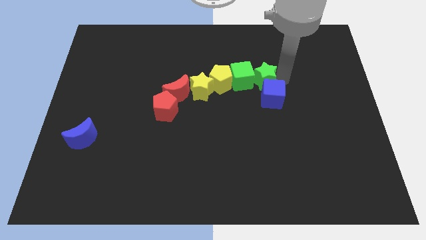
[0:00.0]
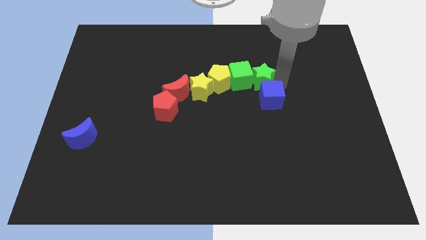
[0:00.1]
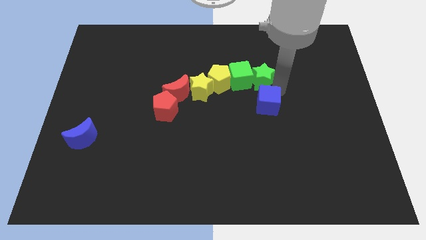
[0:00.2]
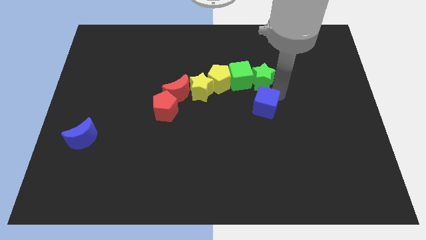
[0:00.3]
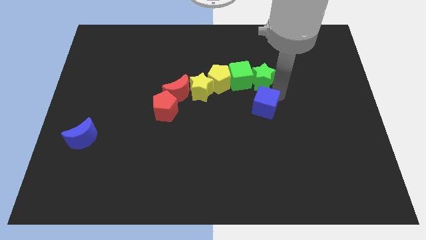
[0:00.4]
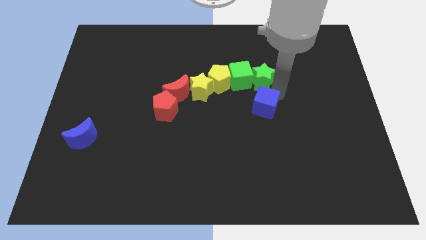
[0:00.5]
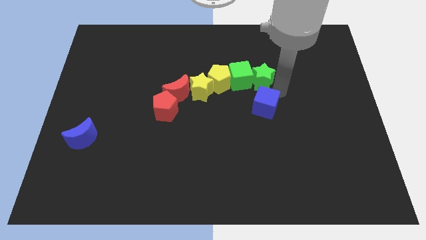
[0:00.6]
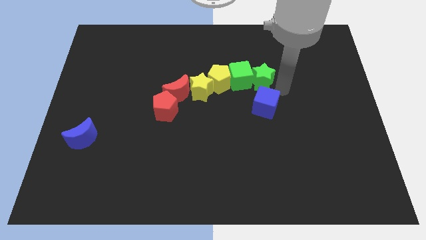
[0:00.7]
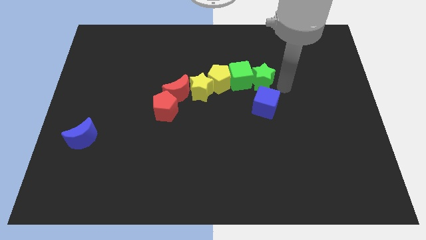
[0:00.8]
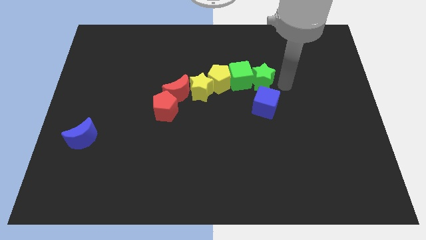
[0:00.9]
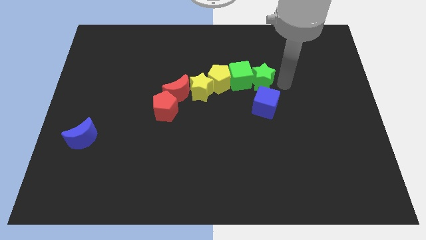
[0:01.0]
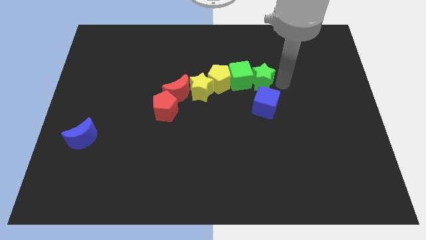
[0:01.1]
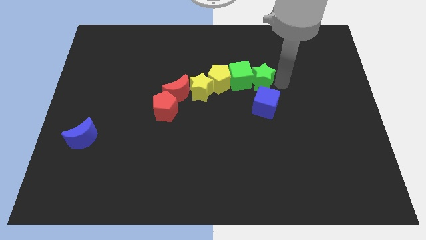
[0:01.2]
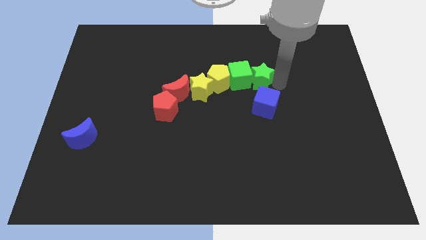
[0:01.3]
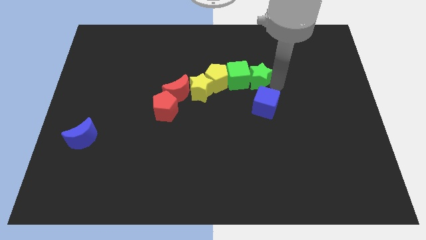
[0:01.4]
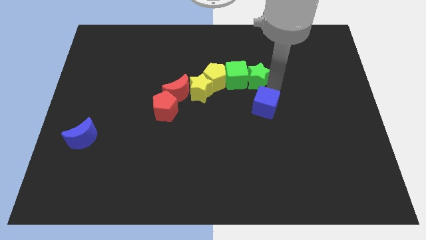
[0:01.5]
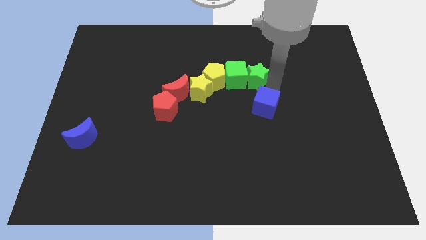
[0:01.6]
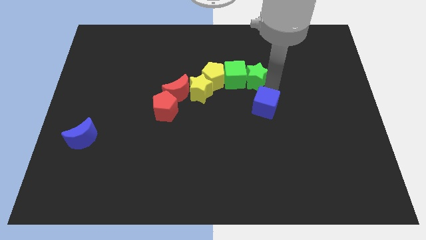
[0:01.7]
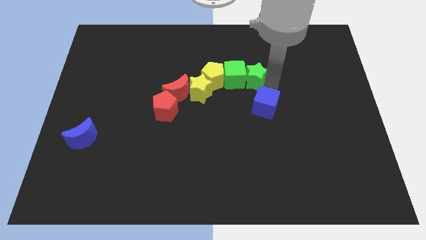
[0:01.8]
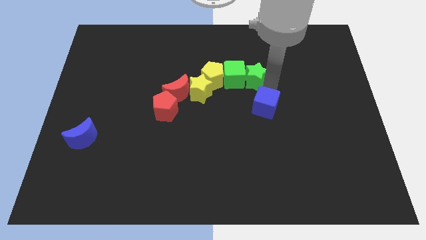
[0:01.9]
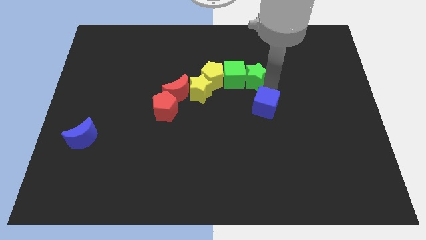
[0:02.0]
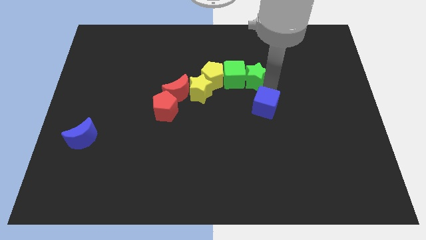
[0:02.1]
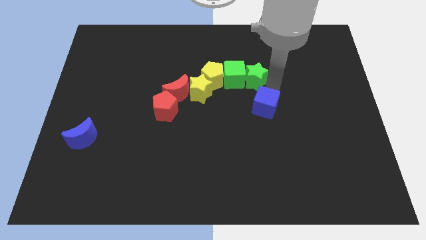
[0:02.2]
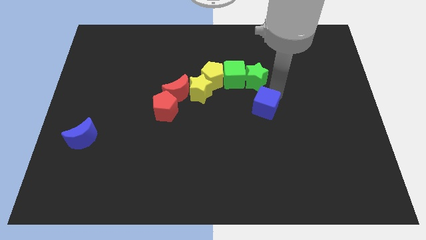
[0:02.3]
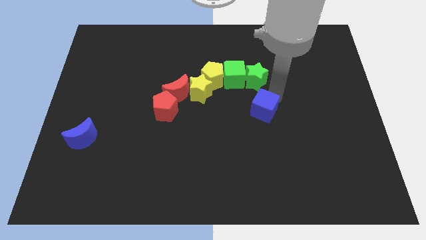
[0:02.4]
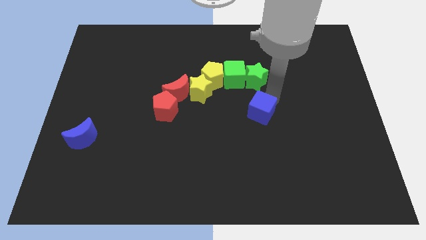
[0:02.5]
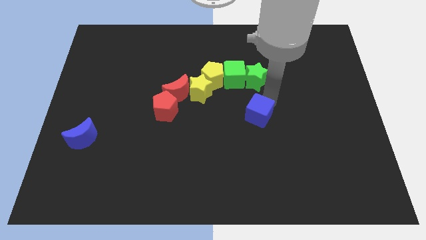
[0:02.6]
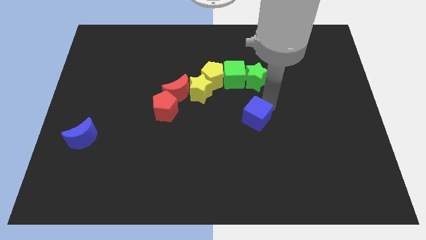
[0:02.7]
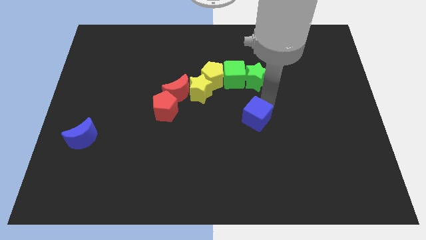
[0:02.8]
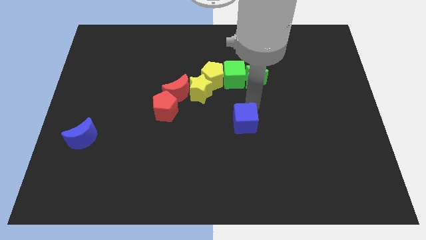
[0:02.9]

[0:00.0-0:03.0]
separate the green star and the blue cube

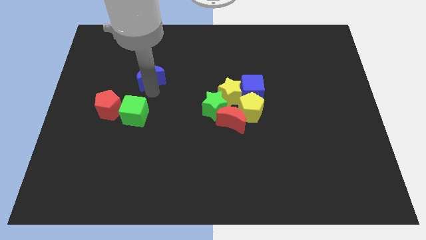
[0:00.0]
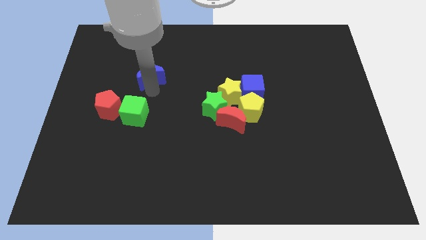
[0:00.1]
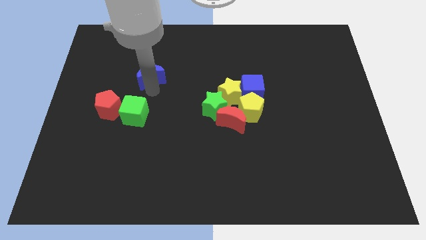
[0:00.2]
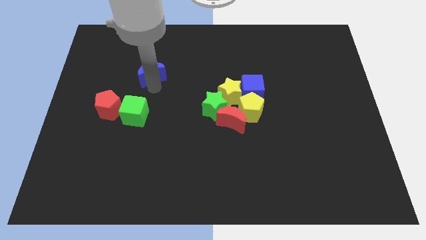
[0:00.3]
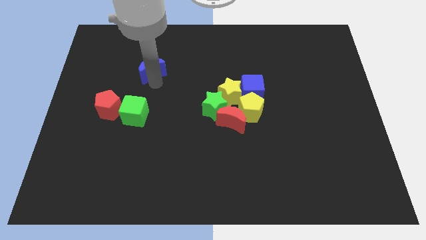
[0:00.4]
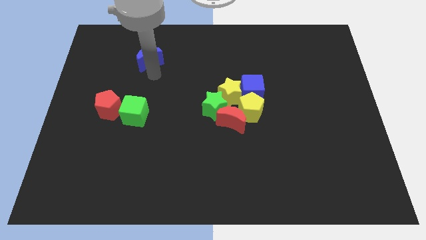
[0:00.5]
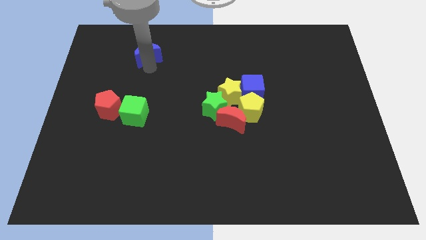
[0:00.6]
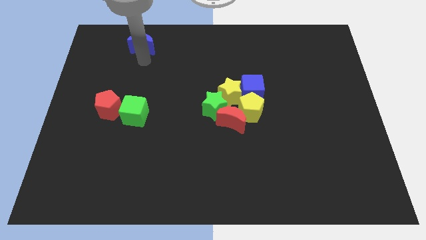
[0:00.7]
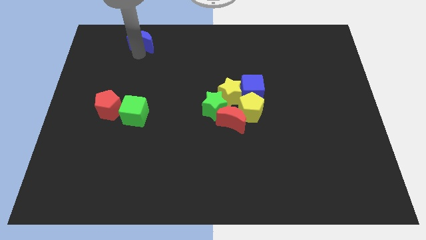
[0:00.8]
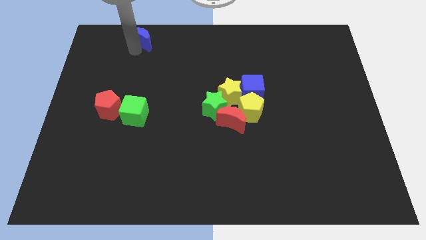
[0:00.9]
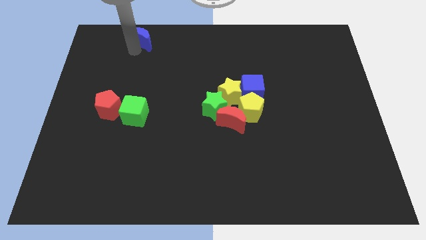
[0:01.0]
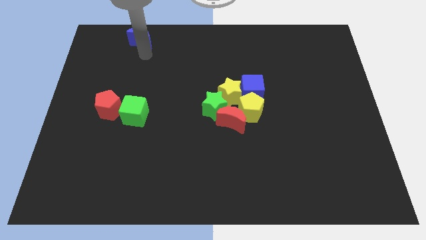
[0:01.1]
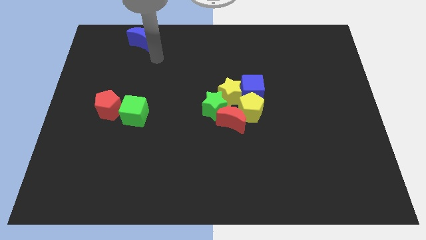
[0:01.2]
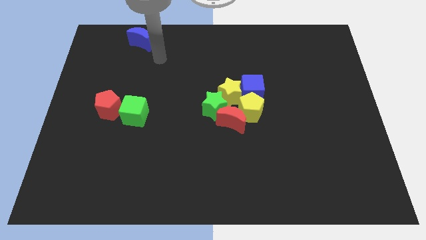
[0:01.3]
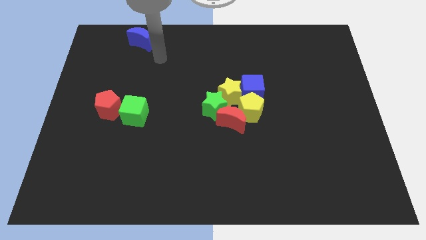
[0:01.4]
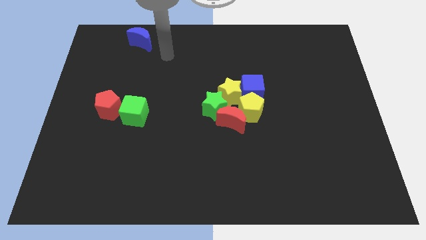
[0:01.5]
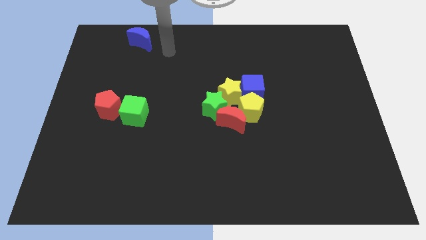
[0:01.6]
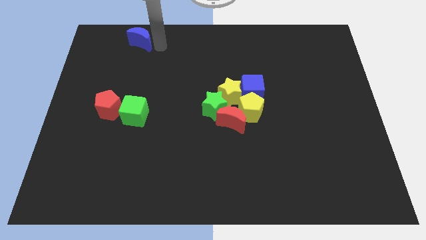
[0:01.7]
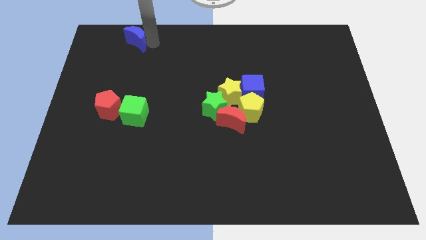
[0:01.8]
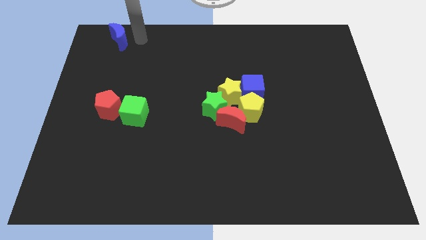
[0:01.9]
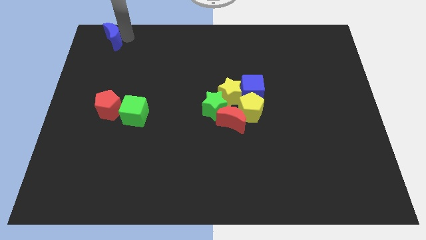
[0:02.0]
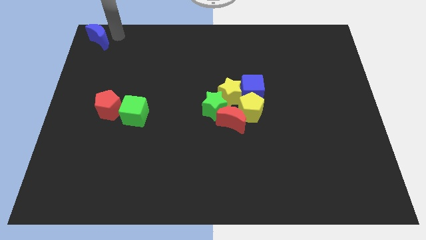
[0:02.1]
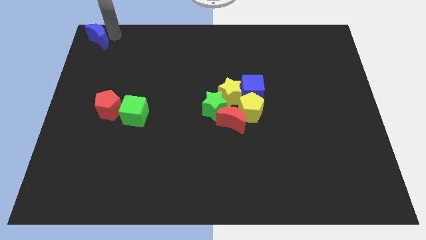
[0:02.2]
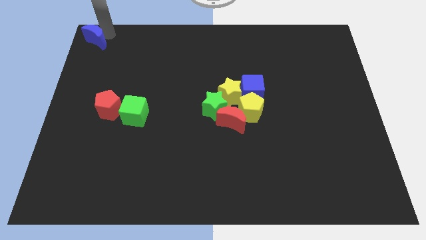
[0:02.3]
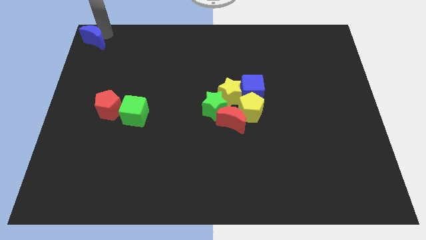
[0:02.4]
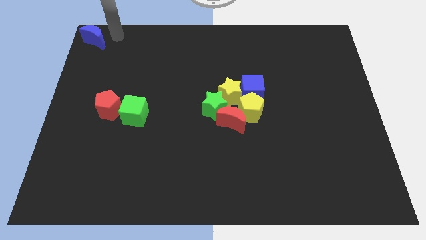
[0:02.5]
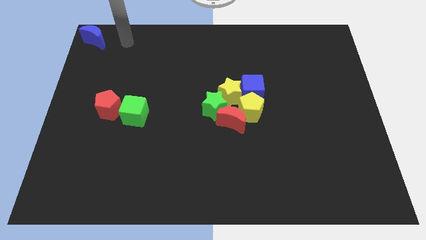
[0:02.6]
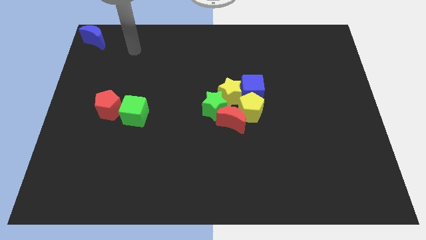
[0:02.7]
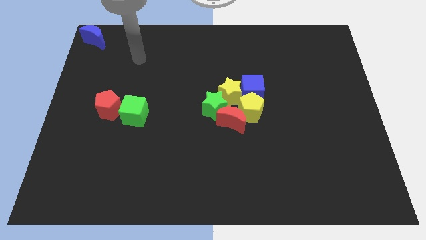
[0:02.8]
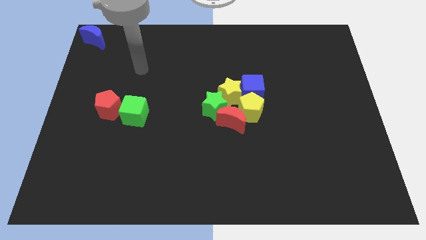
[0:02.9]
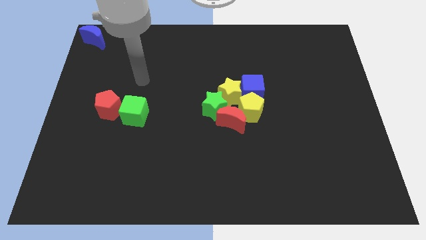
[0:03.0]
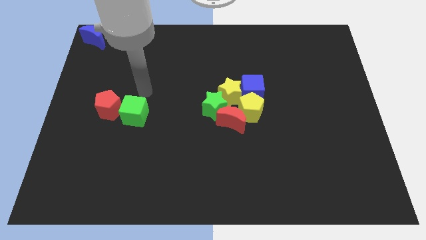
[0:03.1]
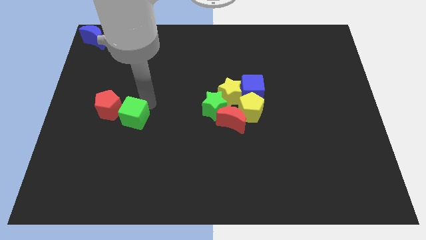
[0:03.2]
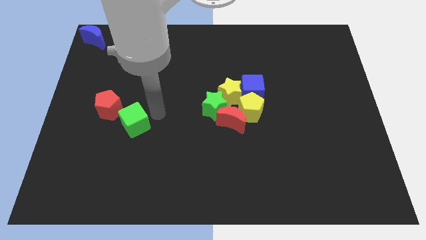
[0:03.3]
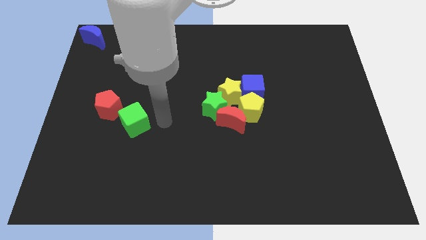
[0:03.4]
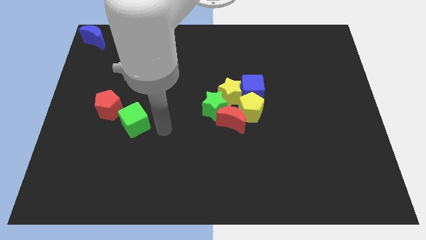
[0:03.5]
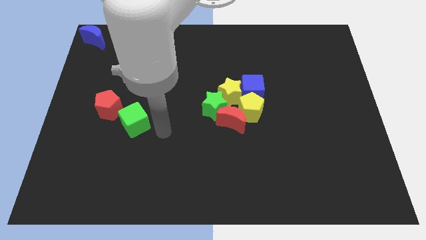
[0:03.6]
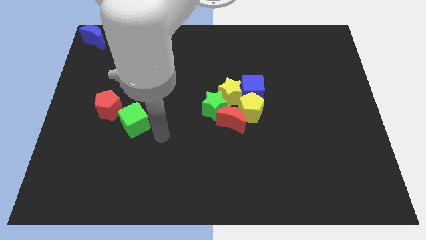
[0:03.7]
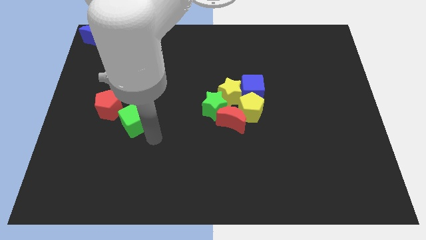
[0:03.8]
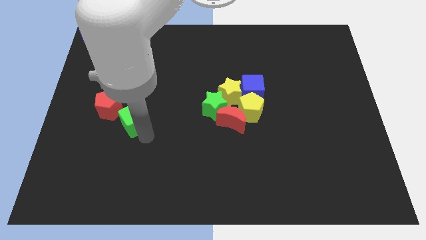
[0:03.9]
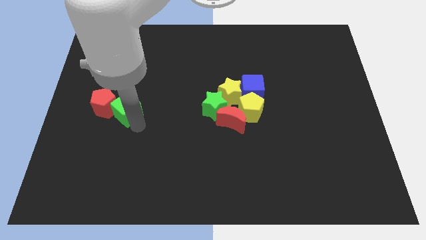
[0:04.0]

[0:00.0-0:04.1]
move the blue moon towards the top side

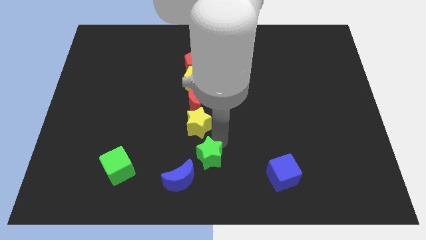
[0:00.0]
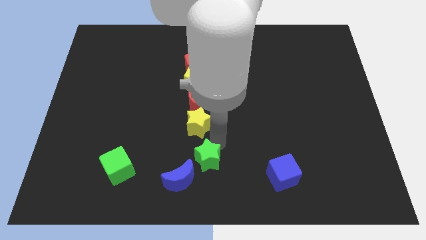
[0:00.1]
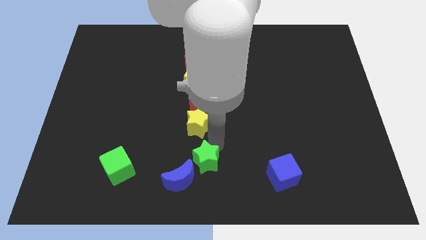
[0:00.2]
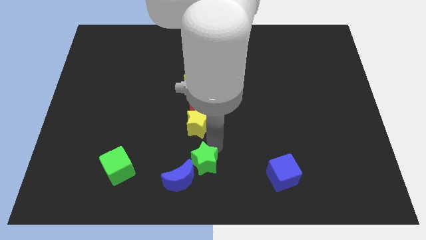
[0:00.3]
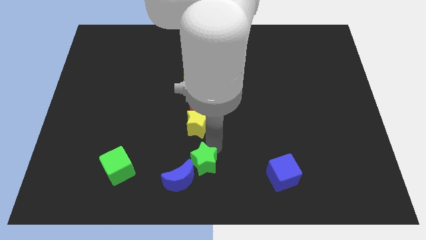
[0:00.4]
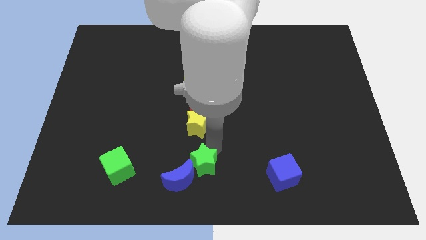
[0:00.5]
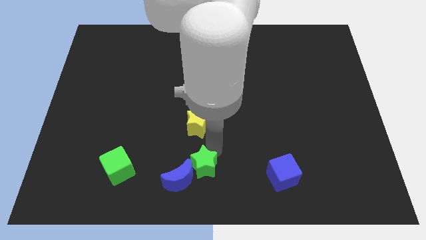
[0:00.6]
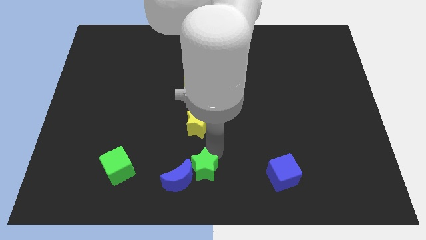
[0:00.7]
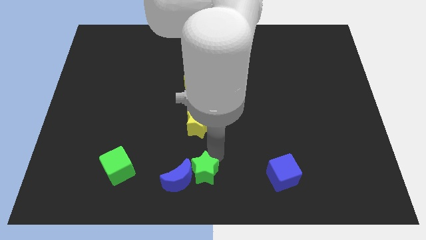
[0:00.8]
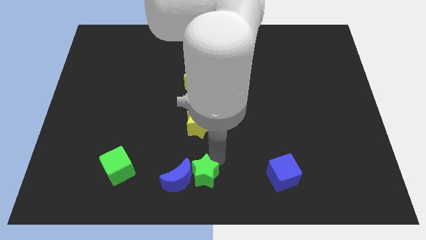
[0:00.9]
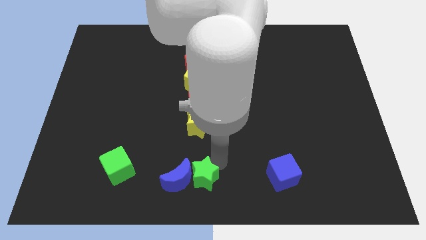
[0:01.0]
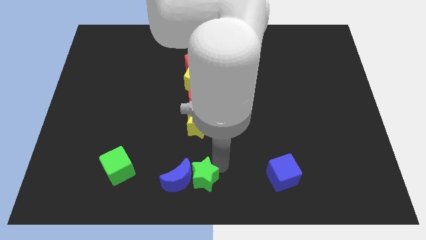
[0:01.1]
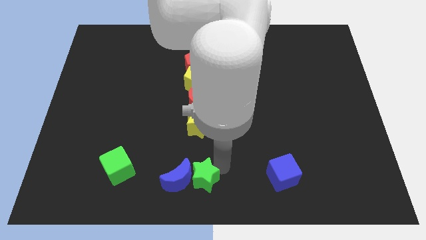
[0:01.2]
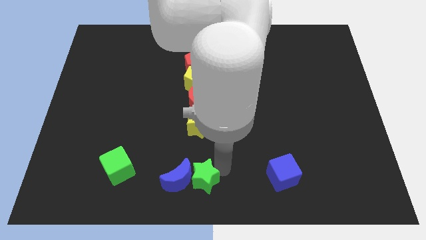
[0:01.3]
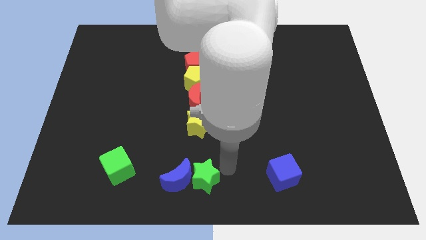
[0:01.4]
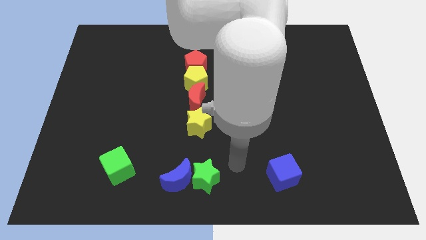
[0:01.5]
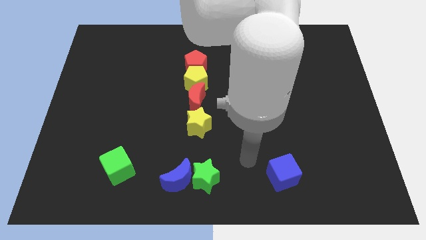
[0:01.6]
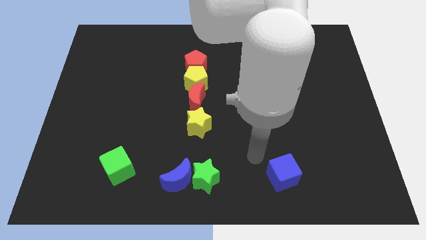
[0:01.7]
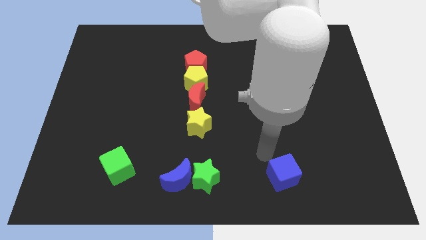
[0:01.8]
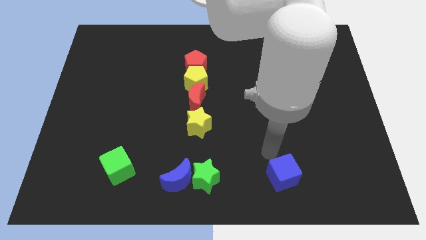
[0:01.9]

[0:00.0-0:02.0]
move the green star to the right of the blue moon
